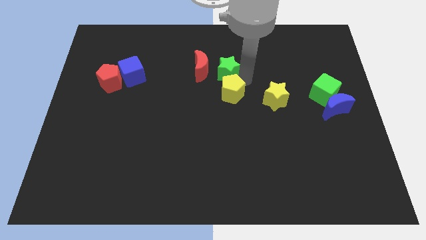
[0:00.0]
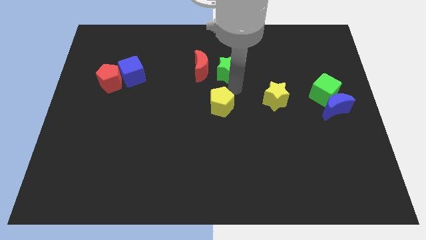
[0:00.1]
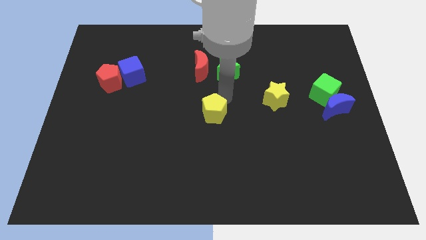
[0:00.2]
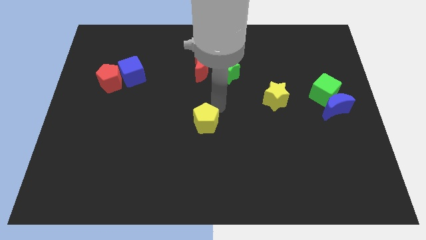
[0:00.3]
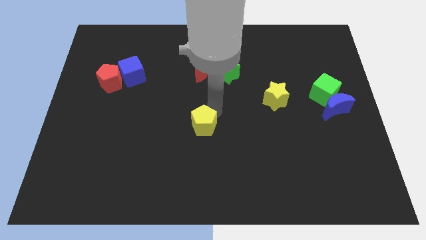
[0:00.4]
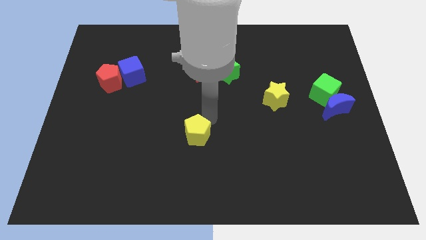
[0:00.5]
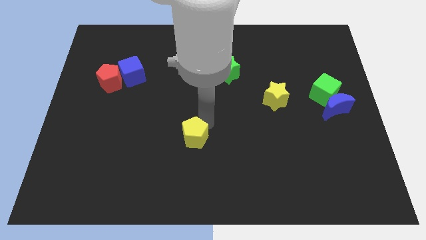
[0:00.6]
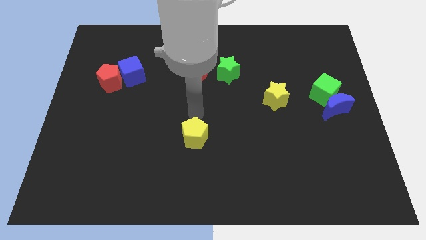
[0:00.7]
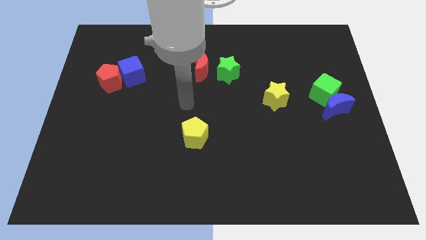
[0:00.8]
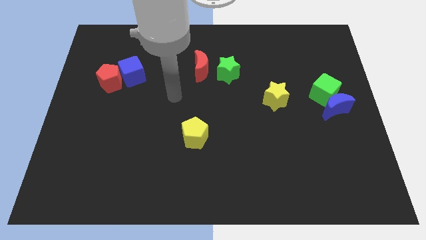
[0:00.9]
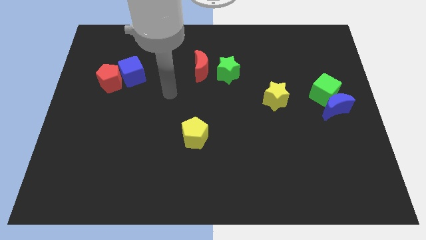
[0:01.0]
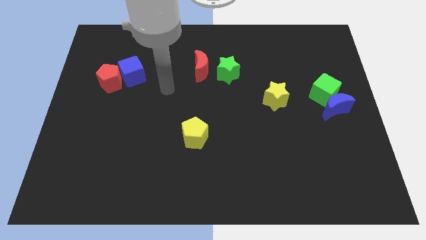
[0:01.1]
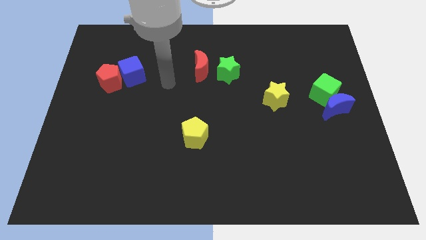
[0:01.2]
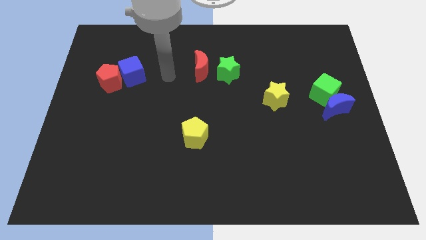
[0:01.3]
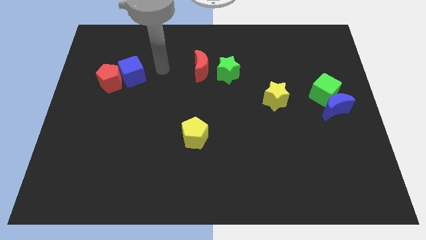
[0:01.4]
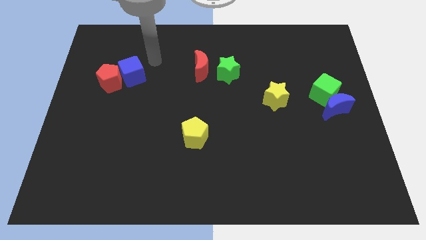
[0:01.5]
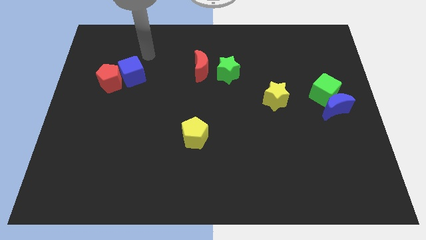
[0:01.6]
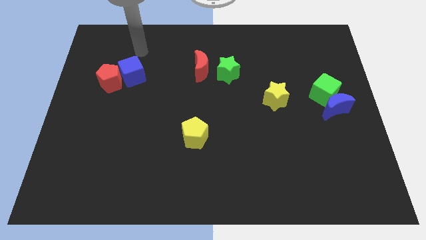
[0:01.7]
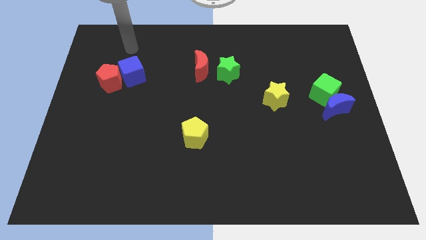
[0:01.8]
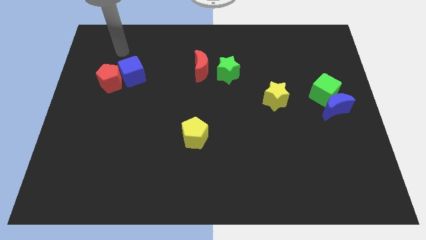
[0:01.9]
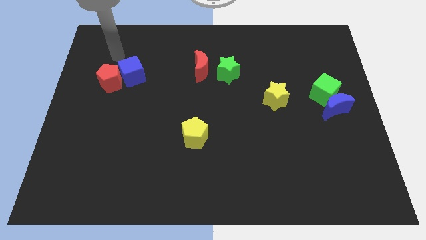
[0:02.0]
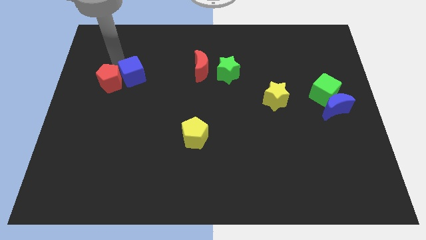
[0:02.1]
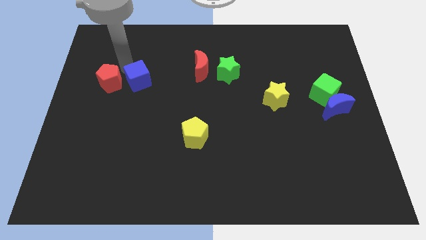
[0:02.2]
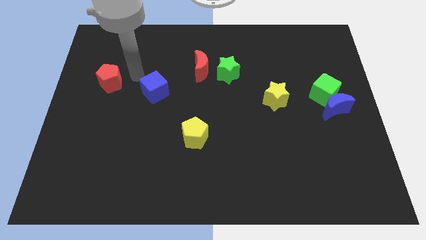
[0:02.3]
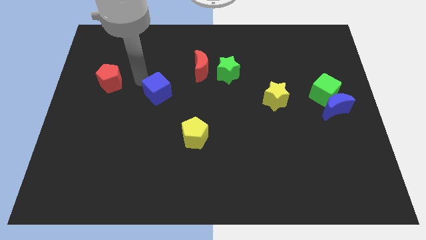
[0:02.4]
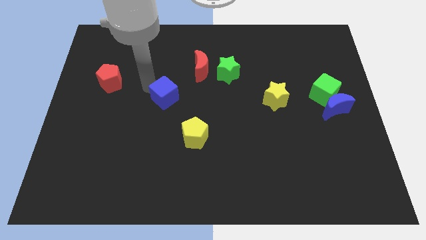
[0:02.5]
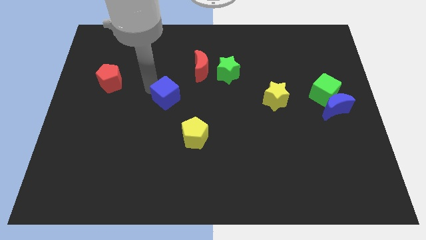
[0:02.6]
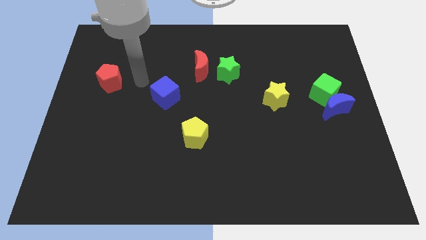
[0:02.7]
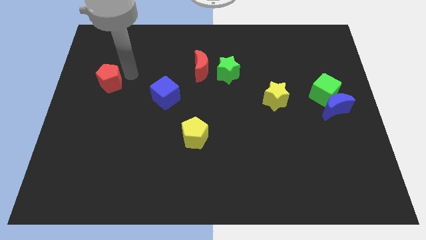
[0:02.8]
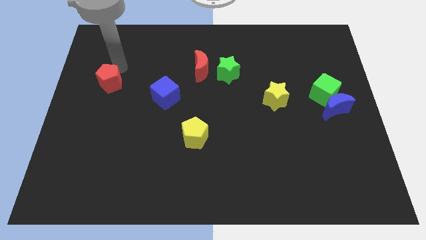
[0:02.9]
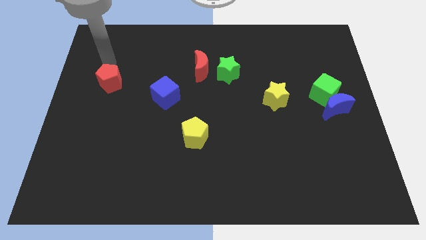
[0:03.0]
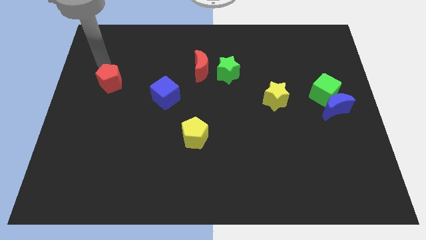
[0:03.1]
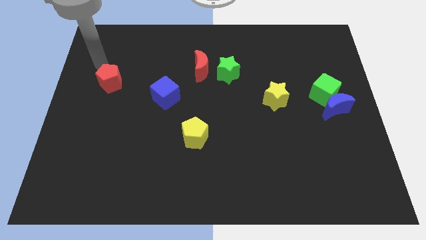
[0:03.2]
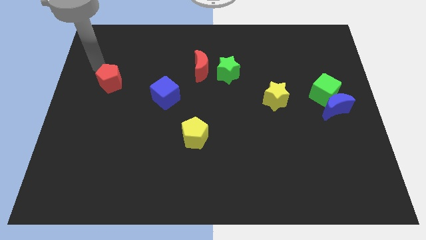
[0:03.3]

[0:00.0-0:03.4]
push the blue cube to the diagonal top of the yellow pentagon

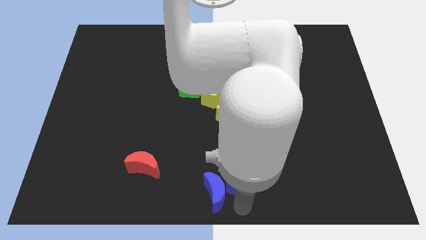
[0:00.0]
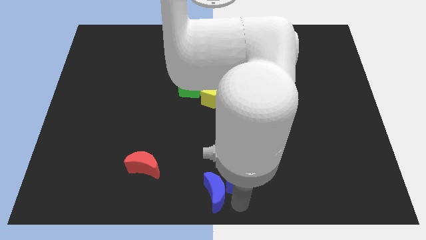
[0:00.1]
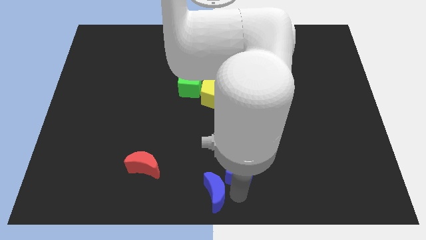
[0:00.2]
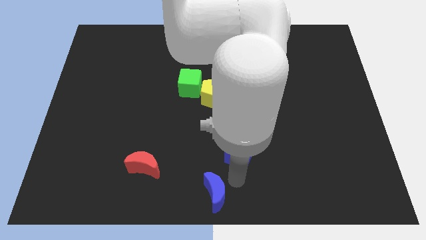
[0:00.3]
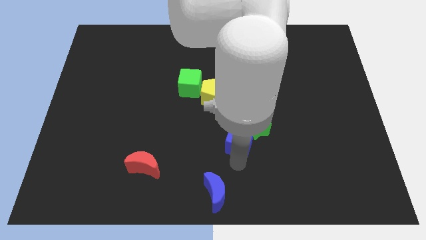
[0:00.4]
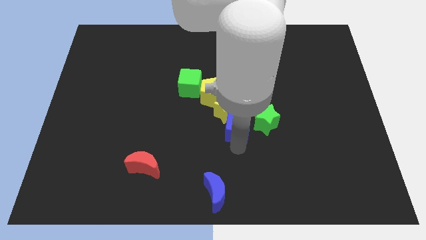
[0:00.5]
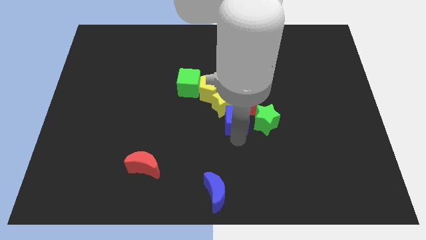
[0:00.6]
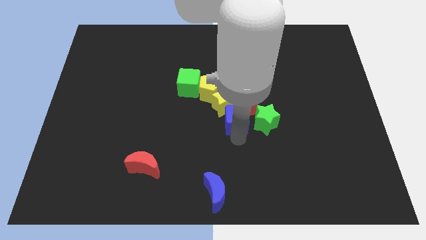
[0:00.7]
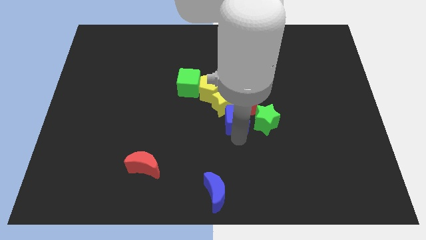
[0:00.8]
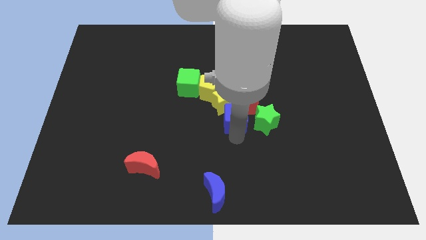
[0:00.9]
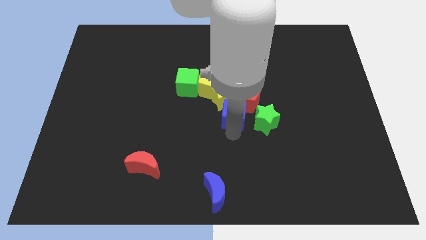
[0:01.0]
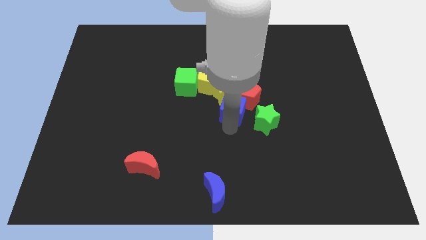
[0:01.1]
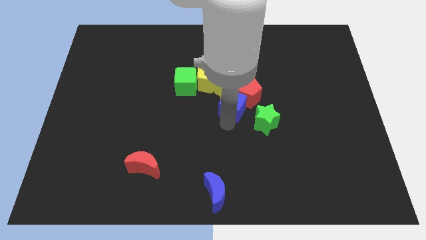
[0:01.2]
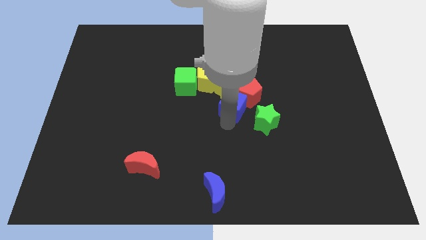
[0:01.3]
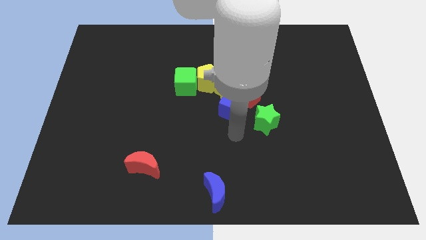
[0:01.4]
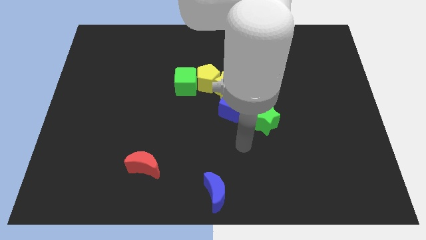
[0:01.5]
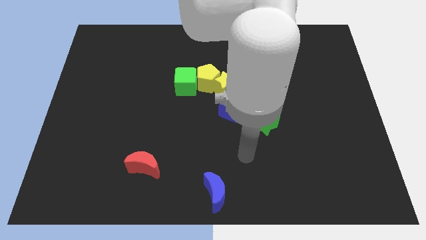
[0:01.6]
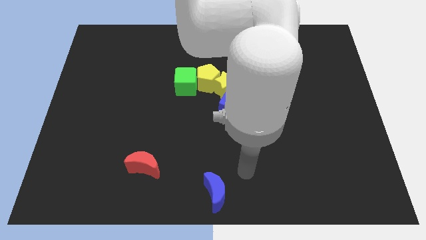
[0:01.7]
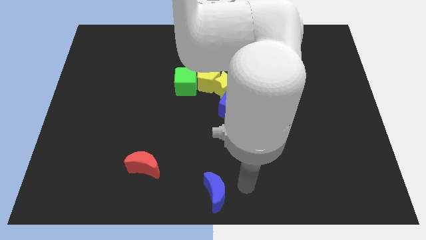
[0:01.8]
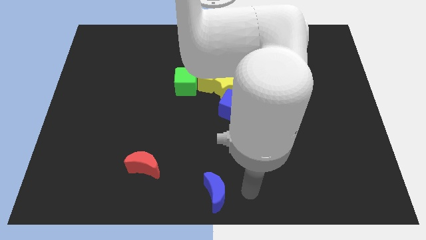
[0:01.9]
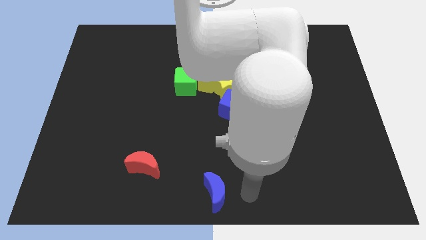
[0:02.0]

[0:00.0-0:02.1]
place the blue cube to the bottom of yellow star

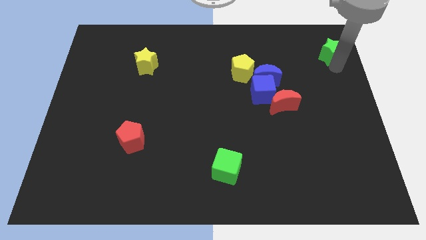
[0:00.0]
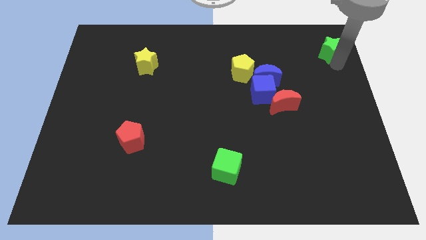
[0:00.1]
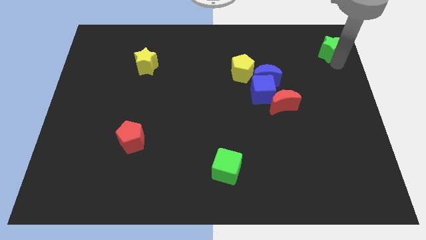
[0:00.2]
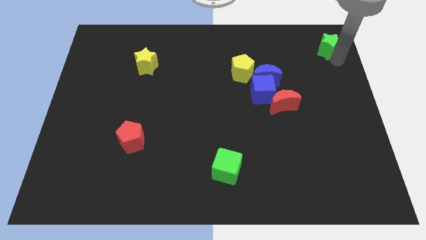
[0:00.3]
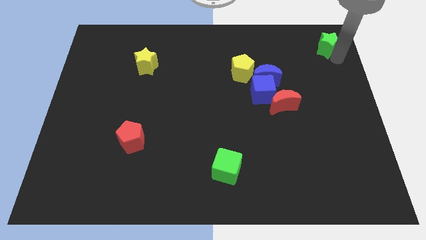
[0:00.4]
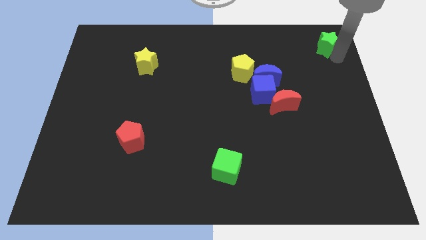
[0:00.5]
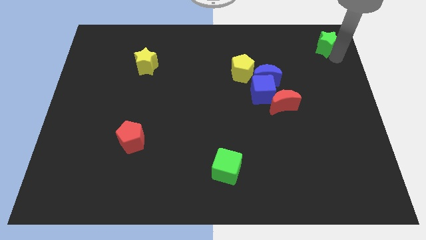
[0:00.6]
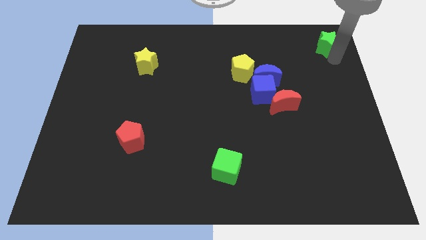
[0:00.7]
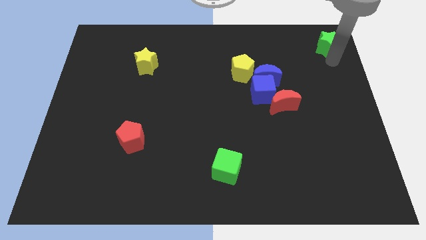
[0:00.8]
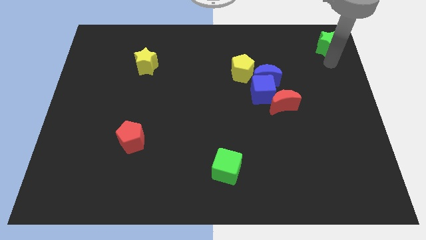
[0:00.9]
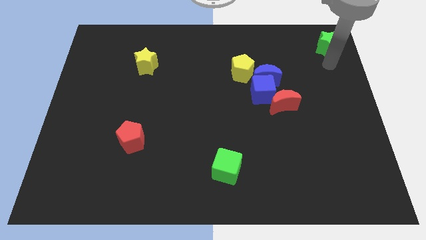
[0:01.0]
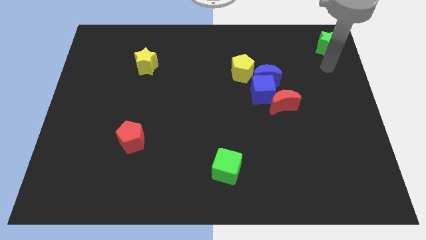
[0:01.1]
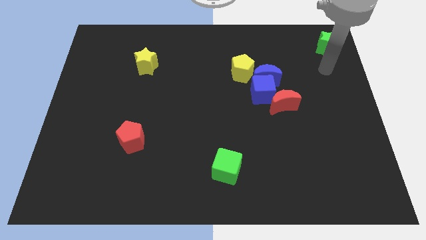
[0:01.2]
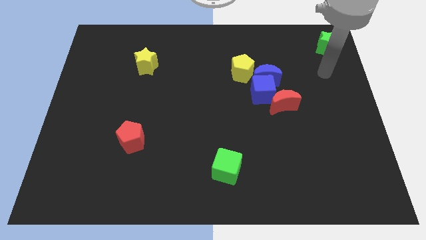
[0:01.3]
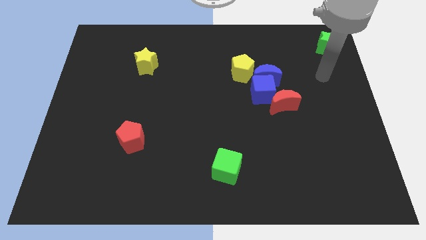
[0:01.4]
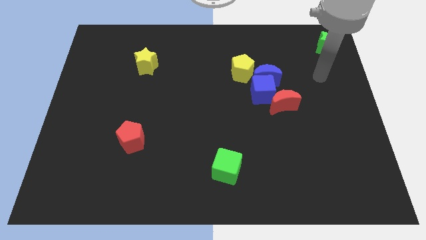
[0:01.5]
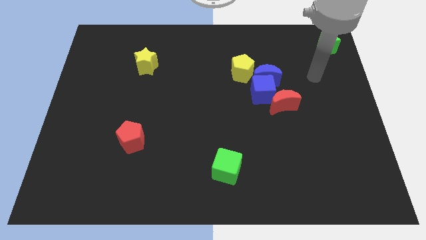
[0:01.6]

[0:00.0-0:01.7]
move the green star to the top right corner of the board

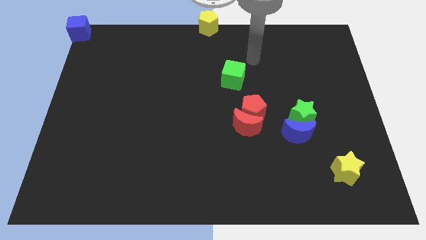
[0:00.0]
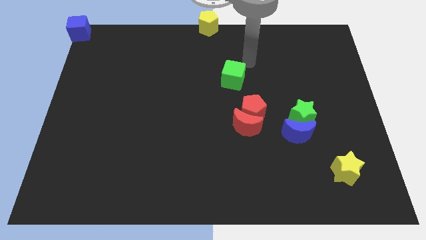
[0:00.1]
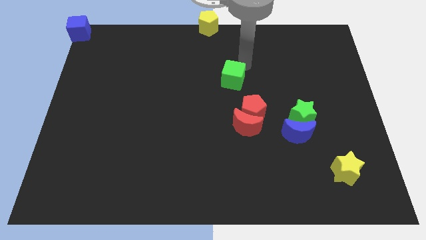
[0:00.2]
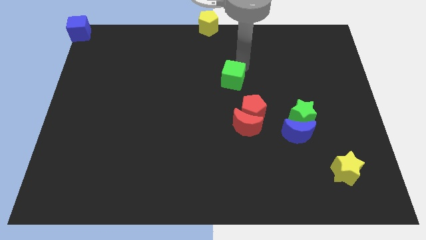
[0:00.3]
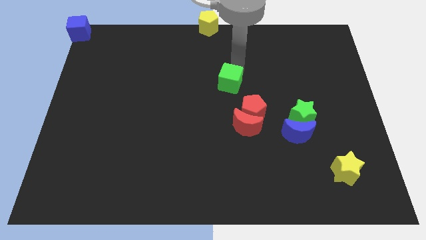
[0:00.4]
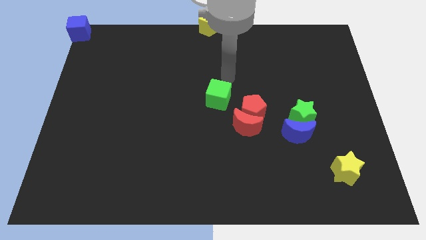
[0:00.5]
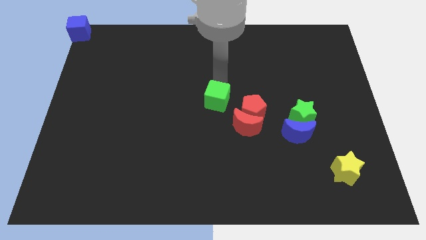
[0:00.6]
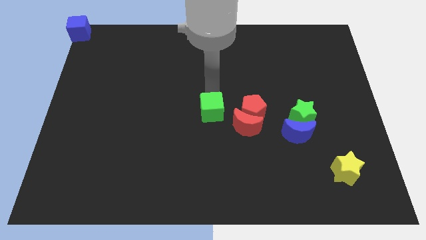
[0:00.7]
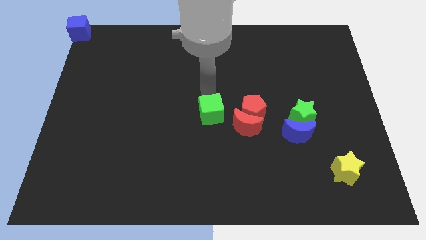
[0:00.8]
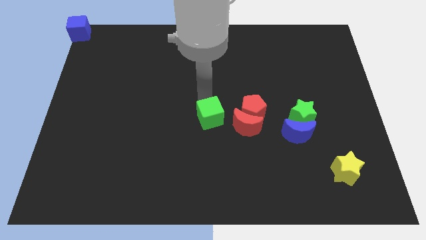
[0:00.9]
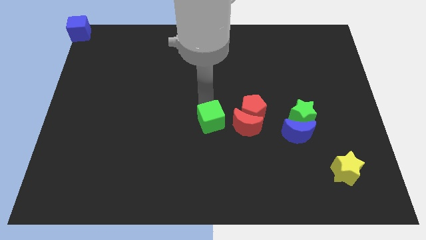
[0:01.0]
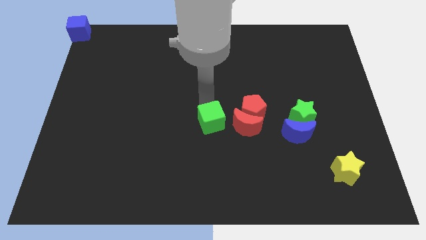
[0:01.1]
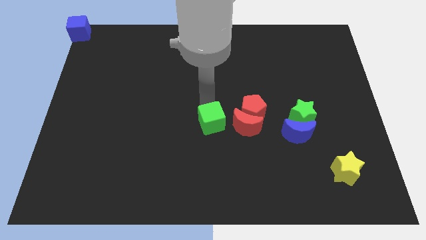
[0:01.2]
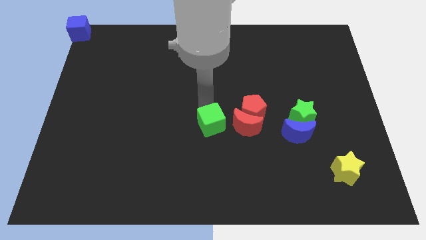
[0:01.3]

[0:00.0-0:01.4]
move the green cube to the left side of the red moon

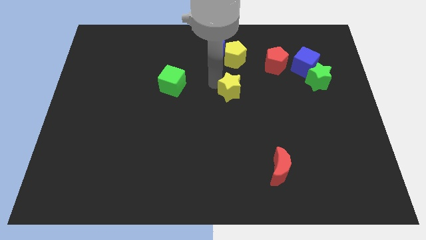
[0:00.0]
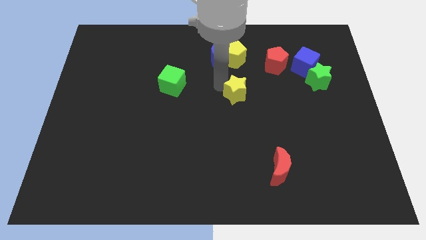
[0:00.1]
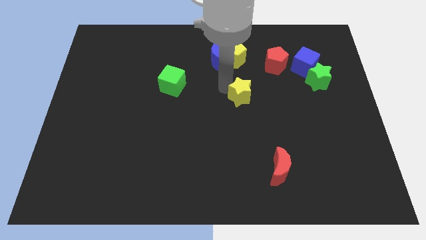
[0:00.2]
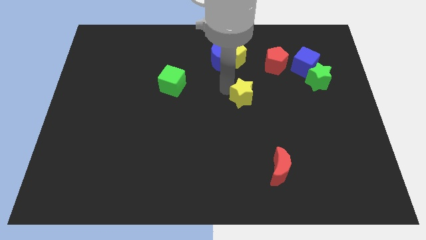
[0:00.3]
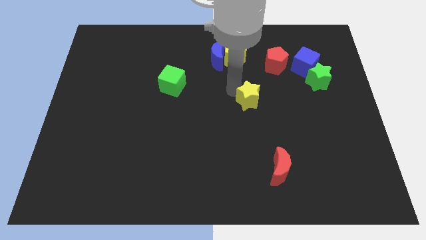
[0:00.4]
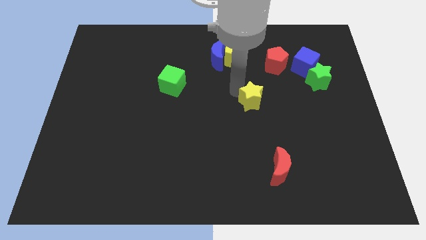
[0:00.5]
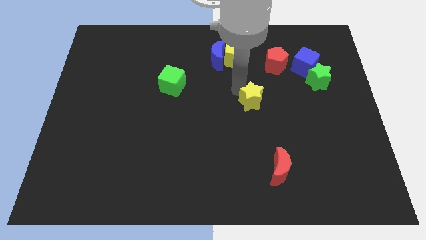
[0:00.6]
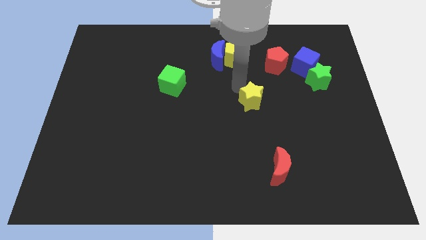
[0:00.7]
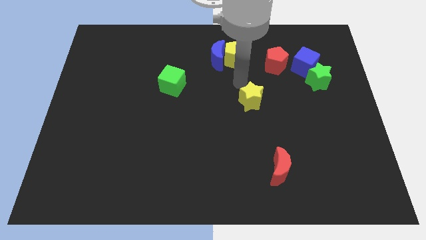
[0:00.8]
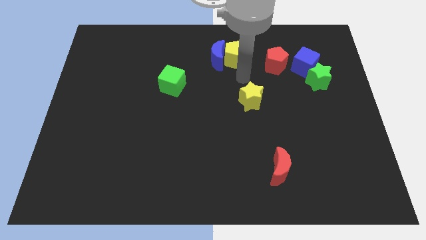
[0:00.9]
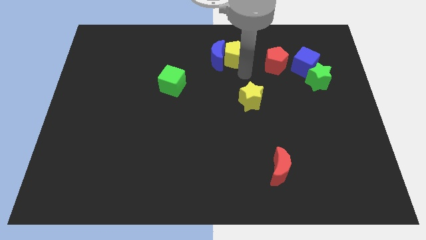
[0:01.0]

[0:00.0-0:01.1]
move the yellow star towards the center of the board
